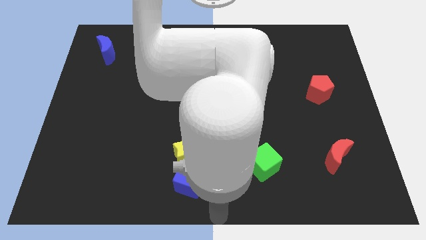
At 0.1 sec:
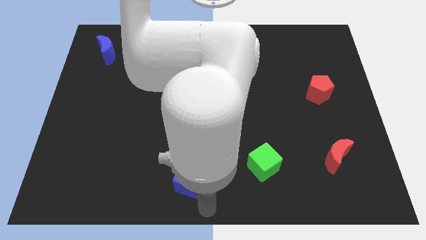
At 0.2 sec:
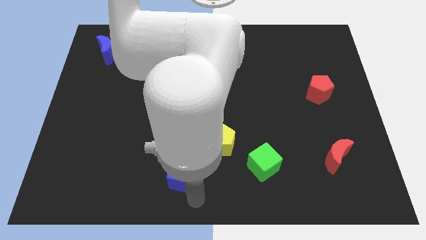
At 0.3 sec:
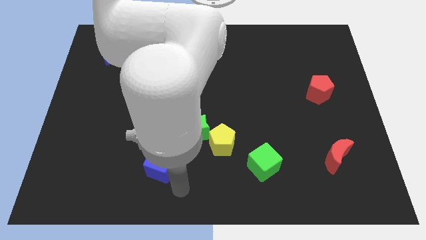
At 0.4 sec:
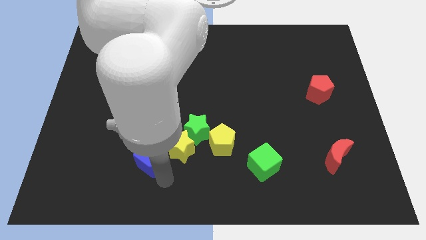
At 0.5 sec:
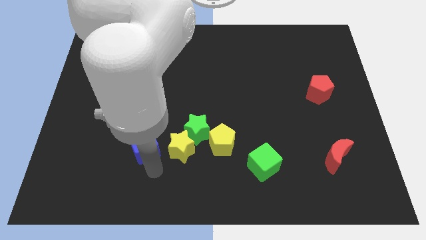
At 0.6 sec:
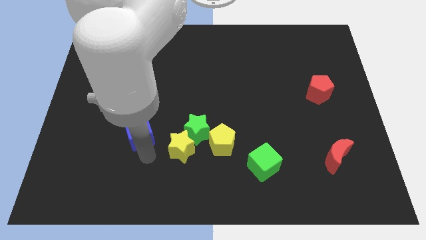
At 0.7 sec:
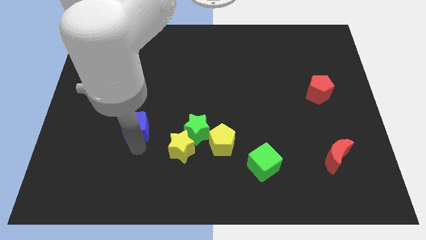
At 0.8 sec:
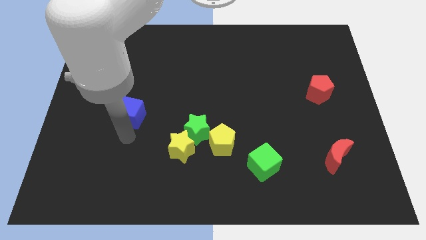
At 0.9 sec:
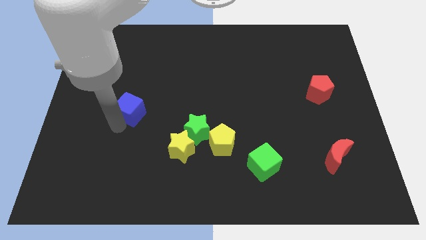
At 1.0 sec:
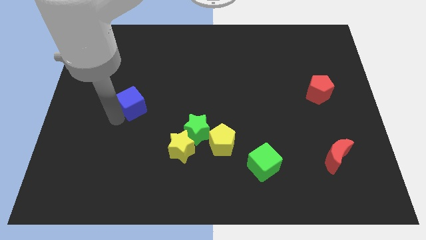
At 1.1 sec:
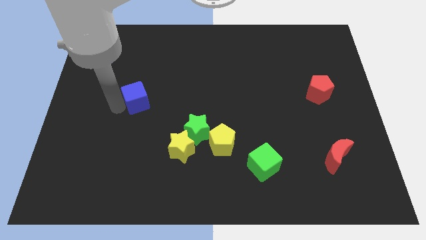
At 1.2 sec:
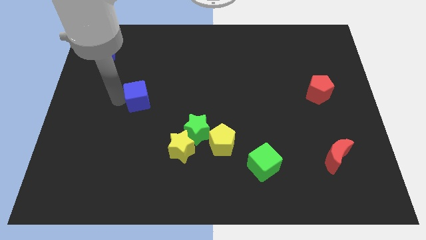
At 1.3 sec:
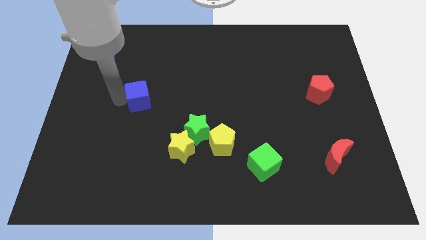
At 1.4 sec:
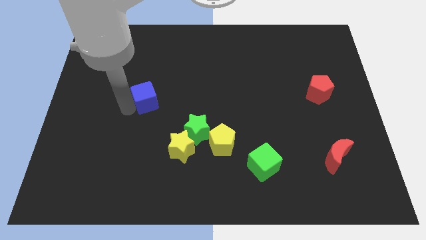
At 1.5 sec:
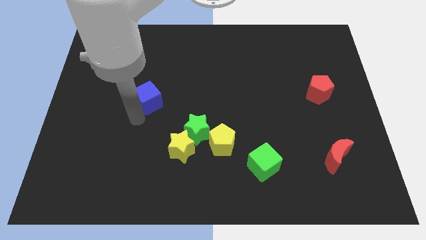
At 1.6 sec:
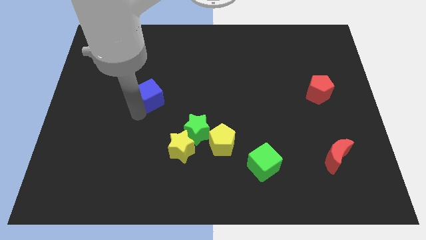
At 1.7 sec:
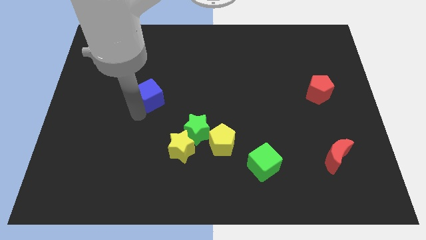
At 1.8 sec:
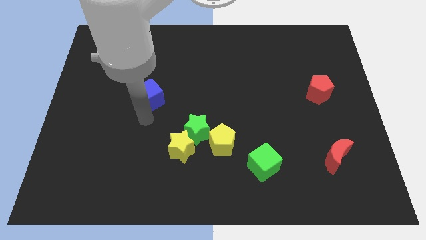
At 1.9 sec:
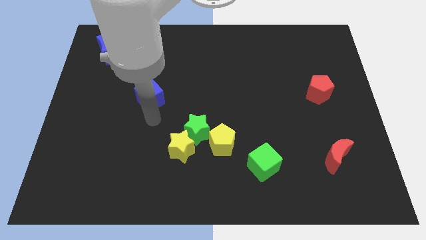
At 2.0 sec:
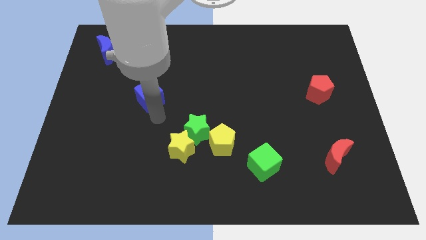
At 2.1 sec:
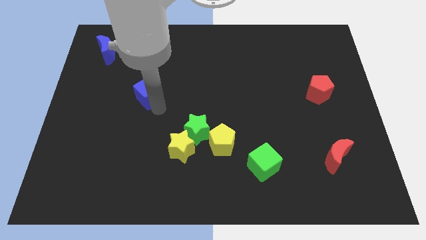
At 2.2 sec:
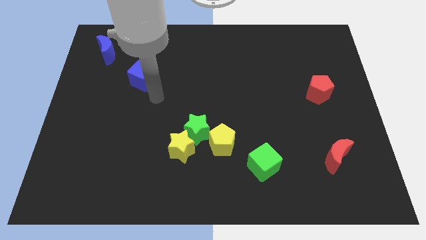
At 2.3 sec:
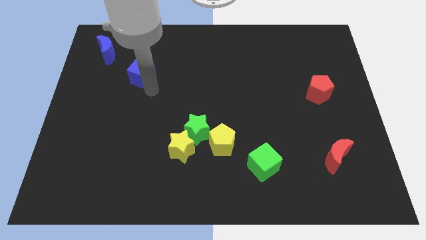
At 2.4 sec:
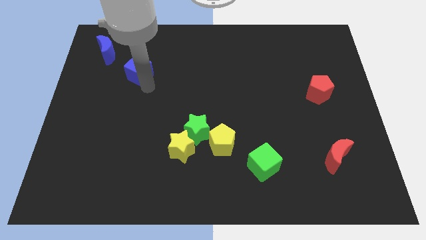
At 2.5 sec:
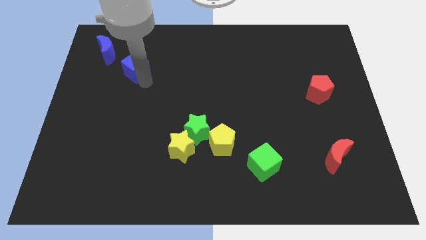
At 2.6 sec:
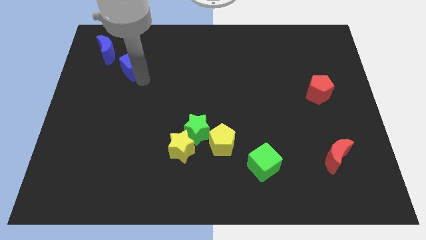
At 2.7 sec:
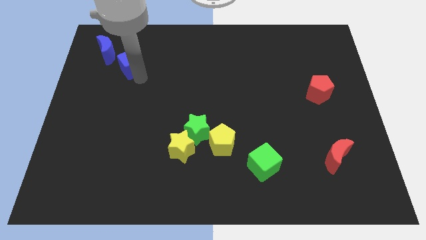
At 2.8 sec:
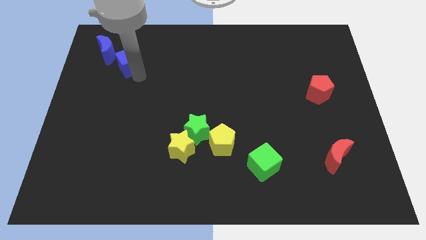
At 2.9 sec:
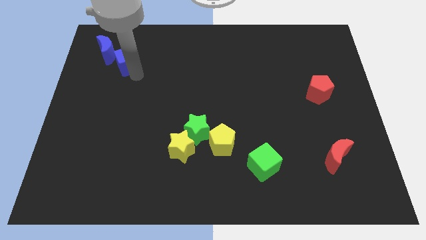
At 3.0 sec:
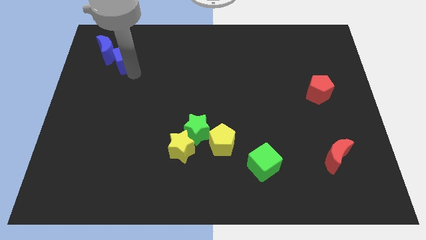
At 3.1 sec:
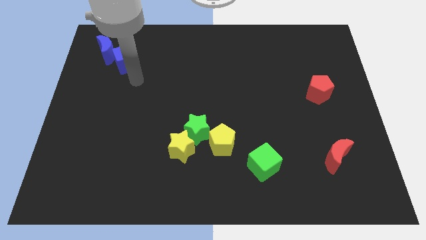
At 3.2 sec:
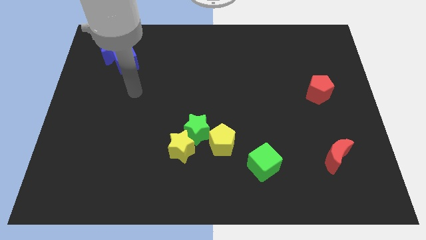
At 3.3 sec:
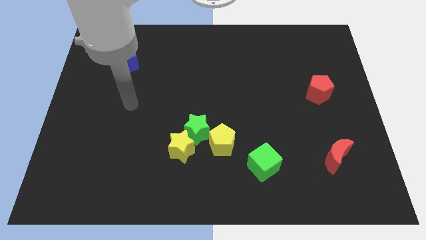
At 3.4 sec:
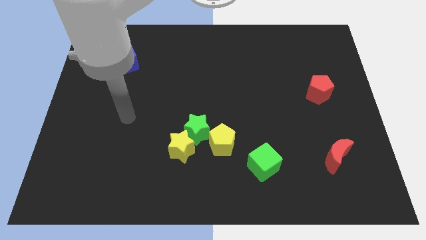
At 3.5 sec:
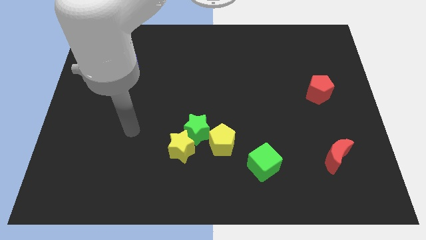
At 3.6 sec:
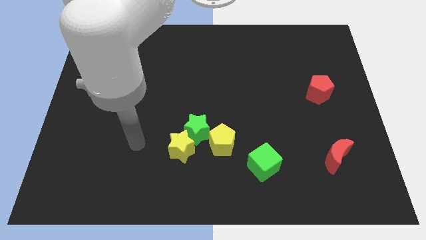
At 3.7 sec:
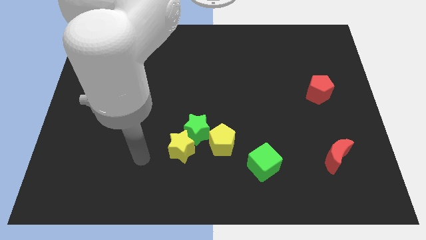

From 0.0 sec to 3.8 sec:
move the blue cube into the blue crescent

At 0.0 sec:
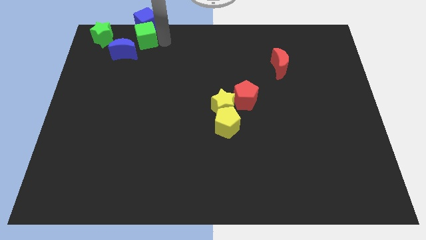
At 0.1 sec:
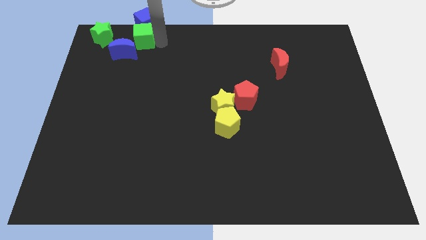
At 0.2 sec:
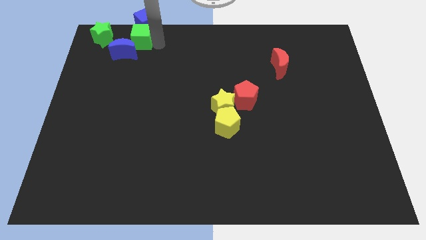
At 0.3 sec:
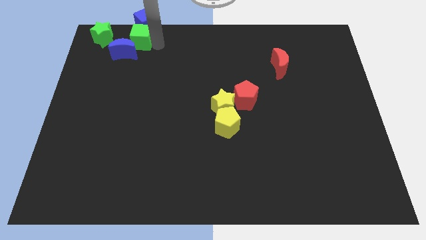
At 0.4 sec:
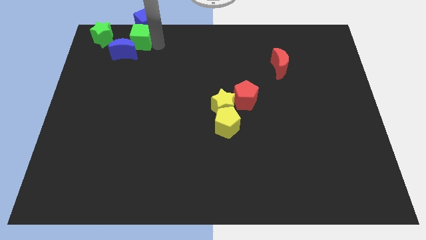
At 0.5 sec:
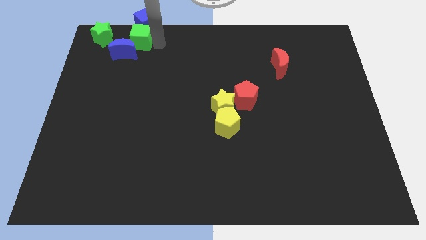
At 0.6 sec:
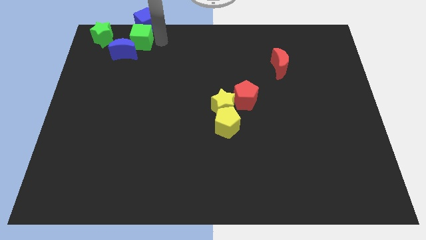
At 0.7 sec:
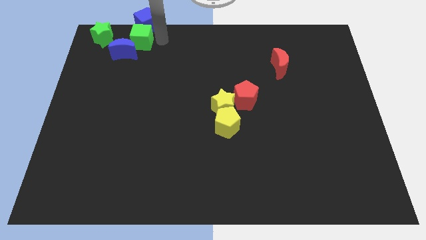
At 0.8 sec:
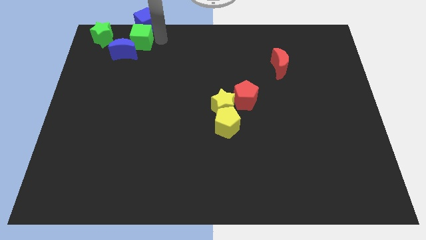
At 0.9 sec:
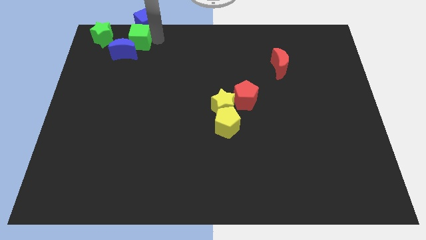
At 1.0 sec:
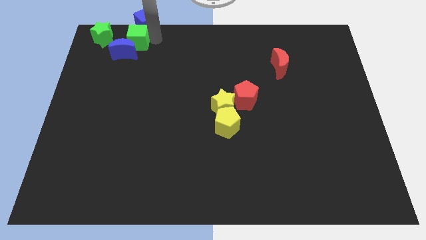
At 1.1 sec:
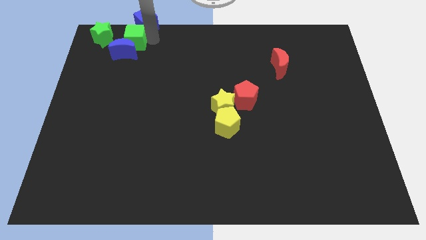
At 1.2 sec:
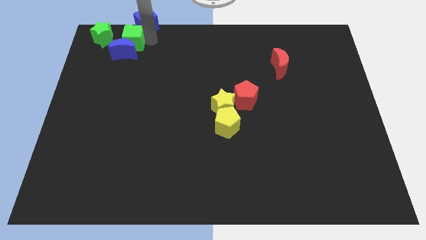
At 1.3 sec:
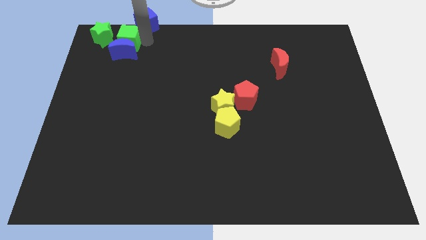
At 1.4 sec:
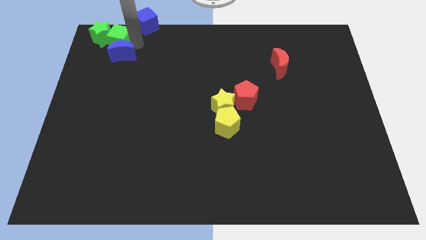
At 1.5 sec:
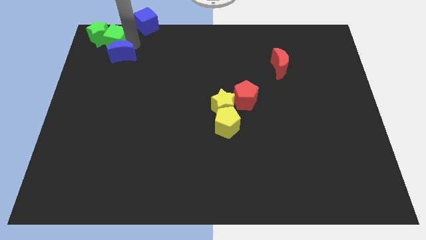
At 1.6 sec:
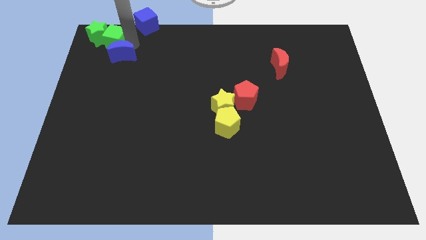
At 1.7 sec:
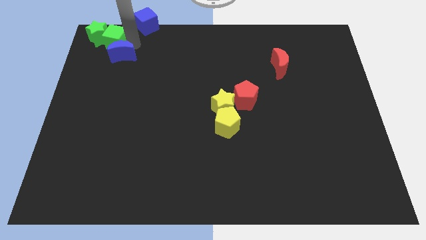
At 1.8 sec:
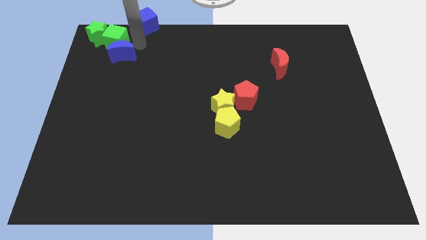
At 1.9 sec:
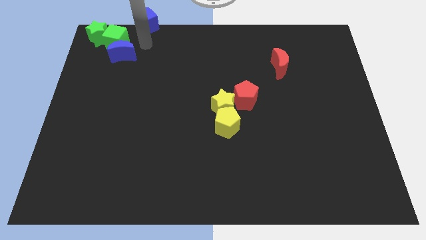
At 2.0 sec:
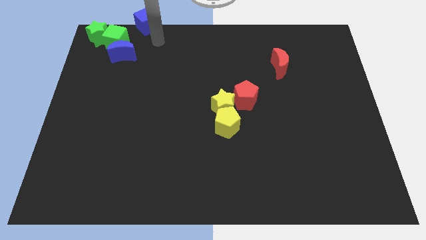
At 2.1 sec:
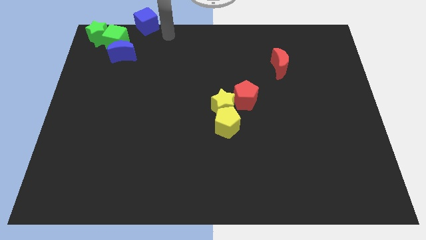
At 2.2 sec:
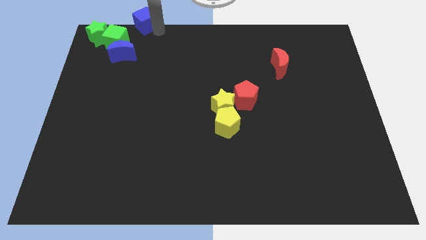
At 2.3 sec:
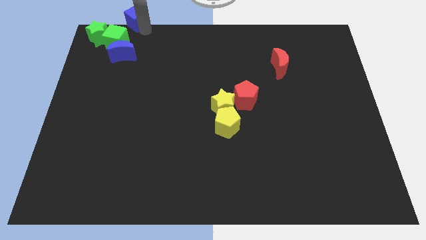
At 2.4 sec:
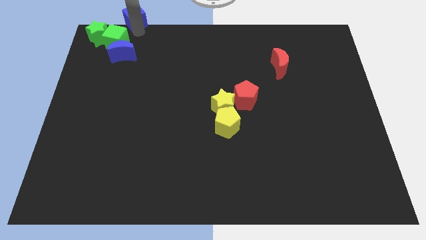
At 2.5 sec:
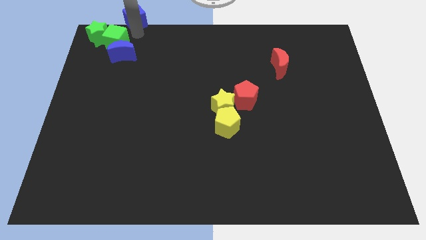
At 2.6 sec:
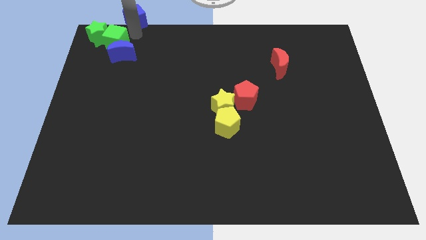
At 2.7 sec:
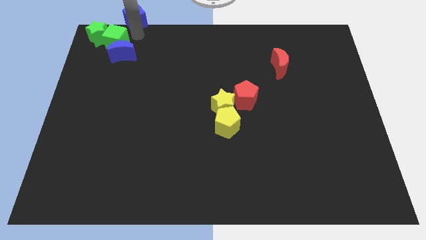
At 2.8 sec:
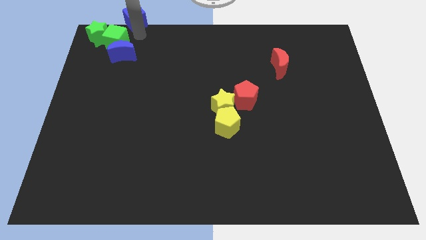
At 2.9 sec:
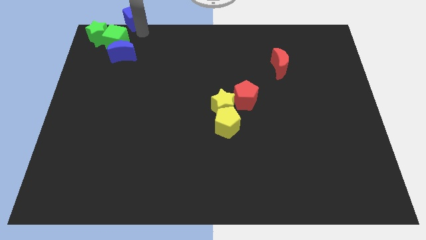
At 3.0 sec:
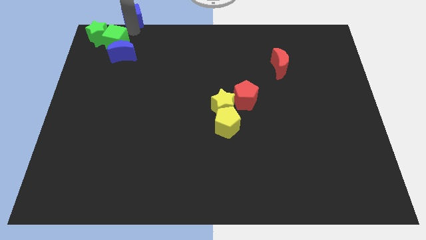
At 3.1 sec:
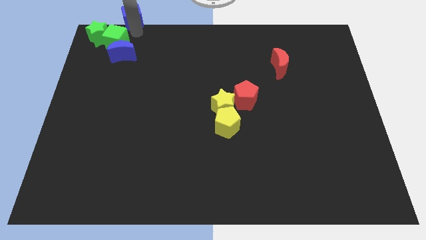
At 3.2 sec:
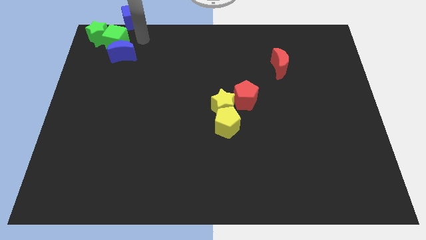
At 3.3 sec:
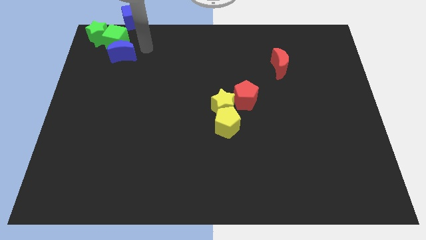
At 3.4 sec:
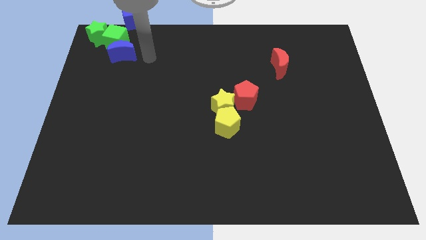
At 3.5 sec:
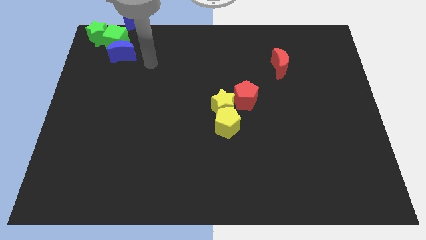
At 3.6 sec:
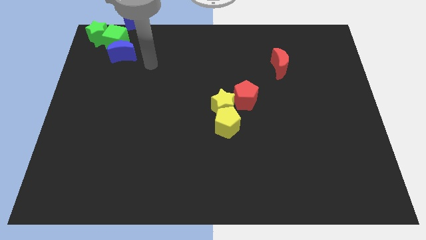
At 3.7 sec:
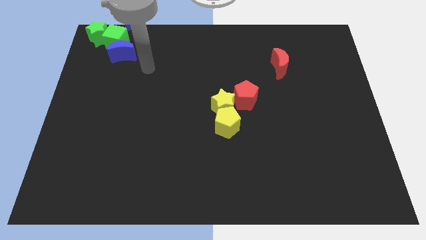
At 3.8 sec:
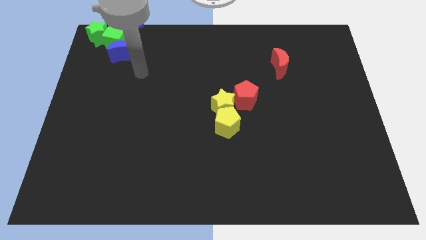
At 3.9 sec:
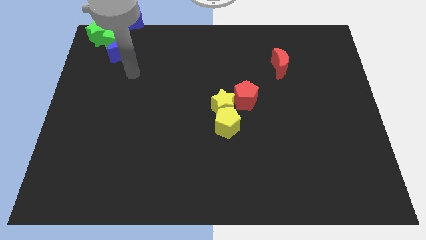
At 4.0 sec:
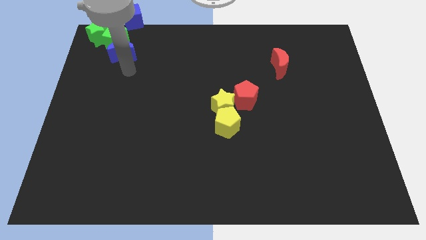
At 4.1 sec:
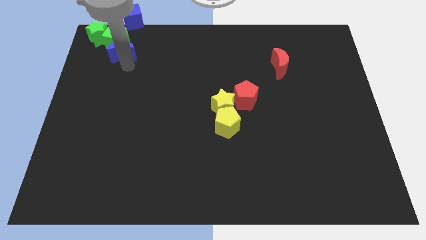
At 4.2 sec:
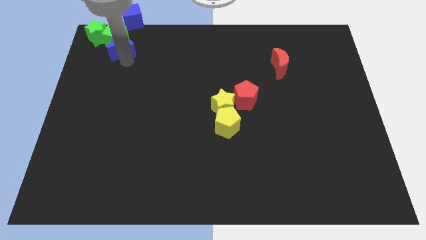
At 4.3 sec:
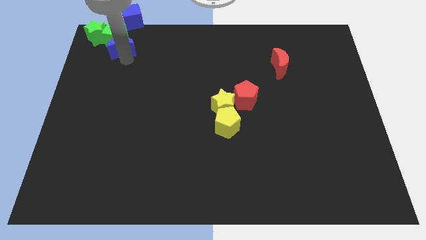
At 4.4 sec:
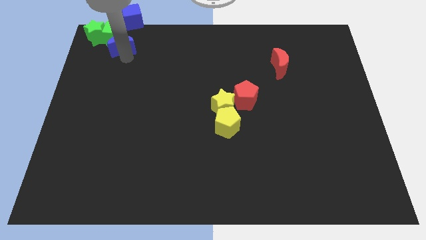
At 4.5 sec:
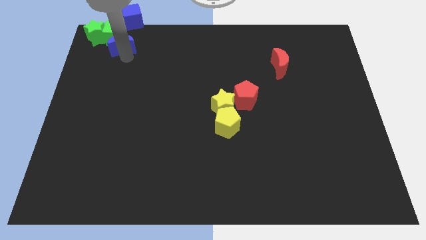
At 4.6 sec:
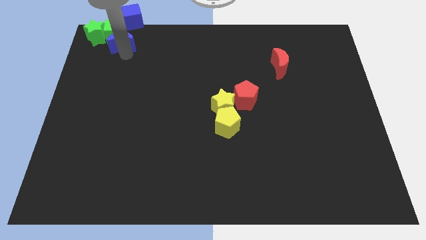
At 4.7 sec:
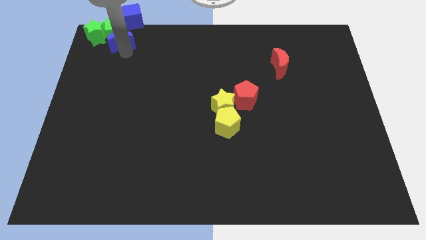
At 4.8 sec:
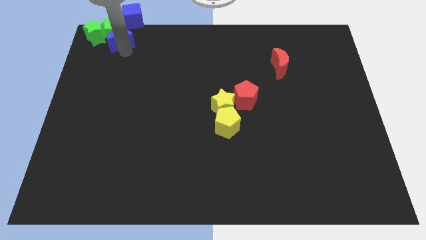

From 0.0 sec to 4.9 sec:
push all the green and blue blocks to the top left side of the board

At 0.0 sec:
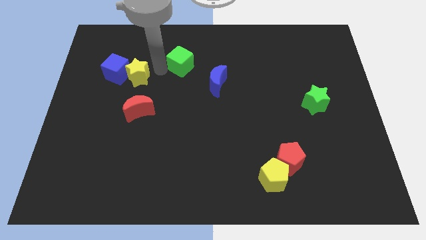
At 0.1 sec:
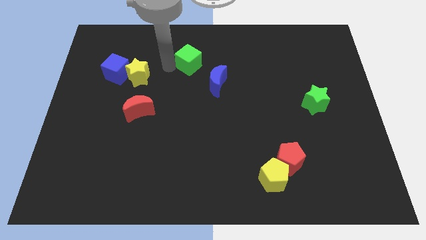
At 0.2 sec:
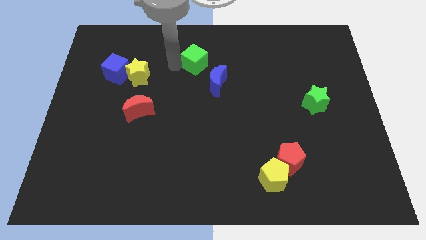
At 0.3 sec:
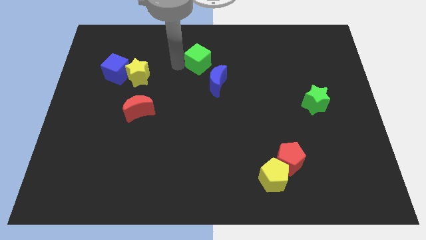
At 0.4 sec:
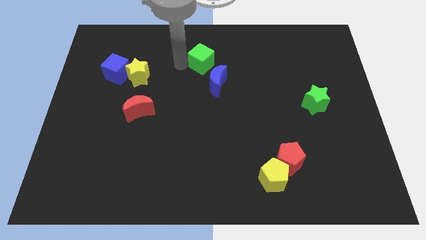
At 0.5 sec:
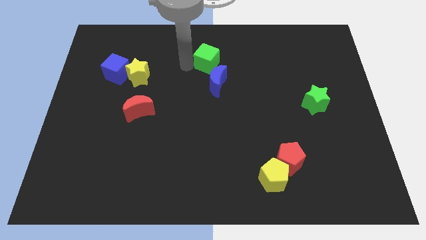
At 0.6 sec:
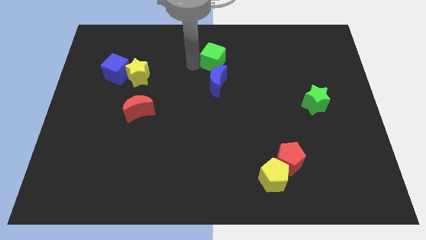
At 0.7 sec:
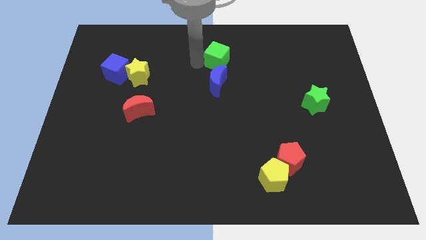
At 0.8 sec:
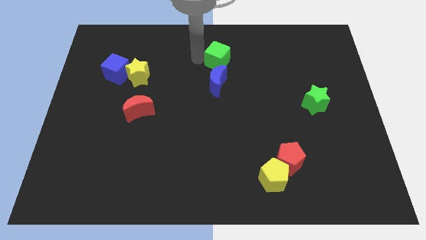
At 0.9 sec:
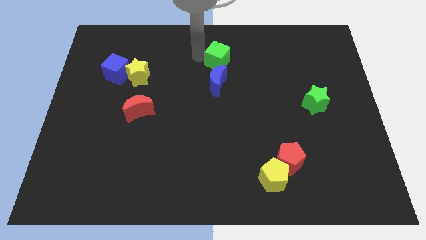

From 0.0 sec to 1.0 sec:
place the green cube above the blue crescent
